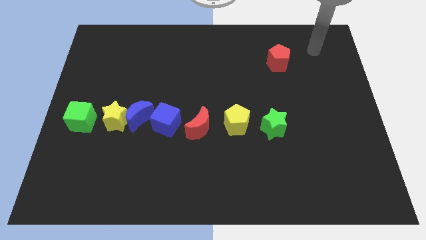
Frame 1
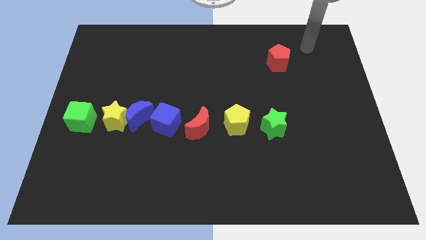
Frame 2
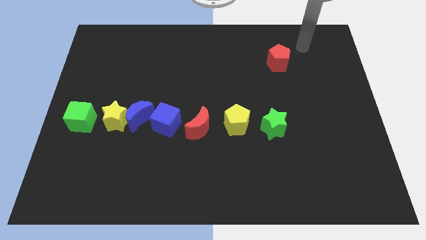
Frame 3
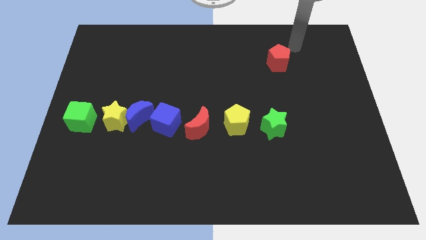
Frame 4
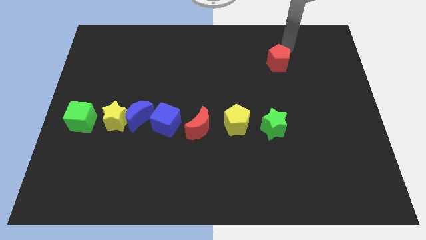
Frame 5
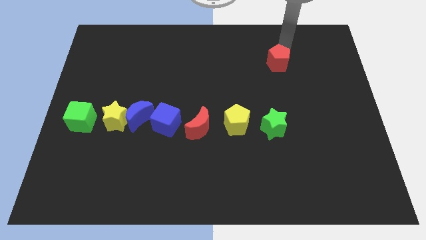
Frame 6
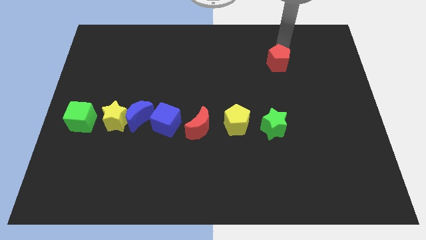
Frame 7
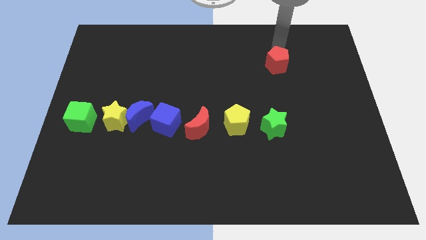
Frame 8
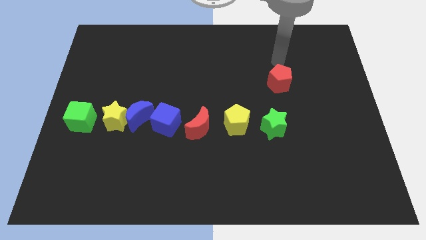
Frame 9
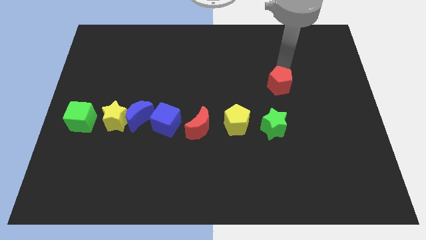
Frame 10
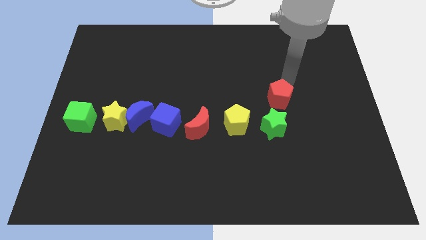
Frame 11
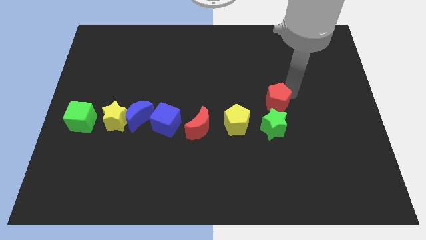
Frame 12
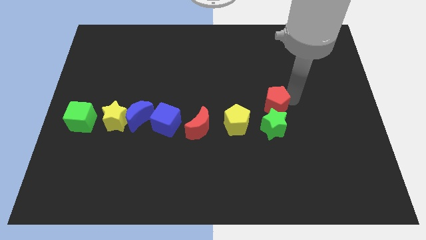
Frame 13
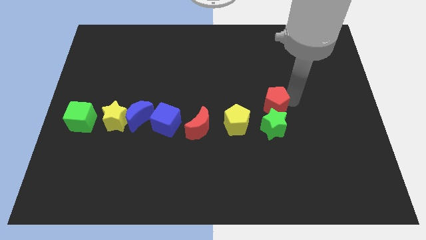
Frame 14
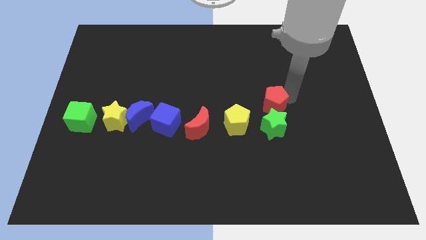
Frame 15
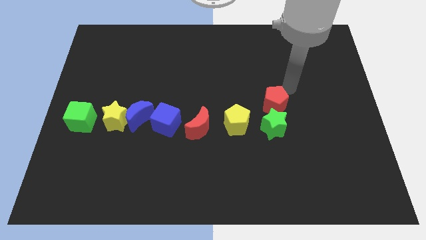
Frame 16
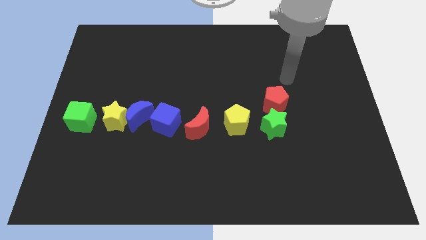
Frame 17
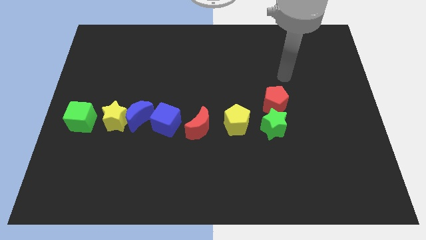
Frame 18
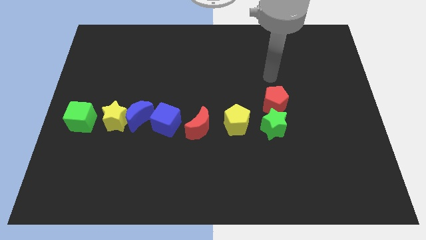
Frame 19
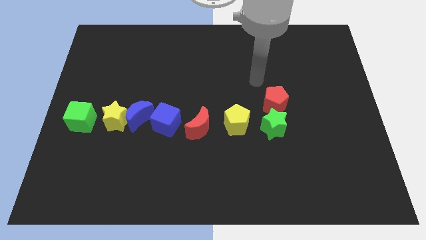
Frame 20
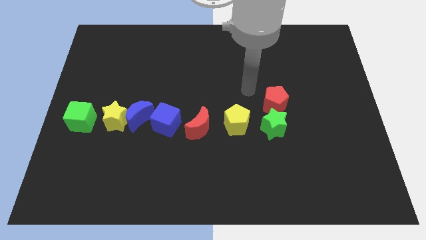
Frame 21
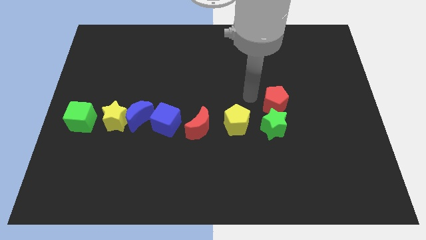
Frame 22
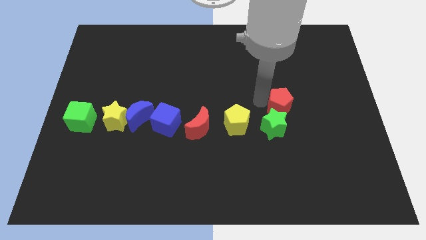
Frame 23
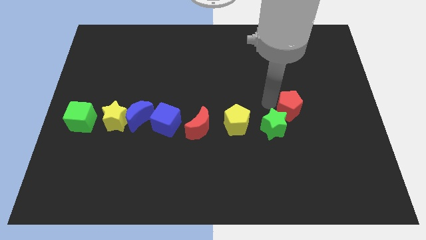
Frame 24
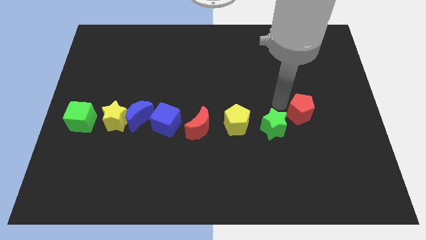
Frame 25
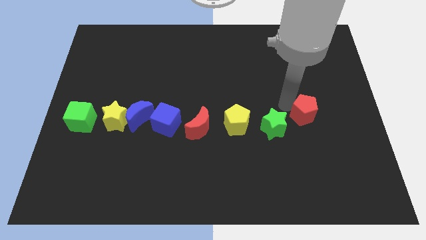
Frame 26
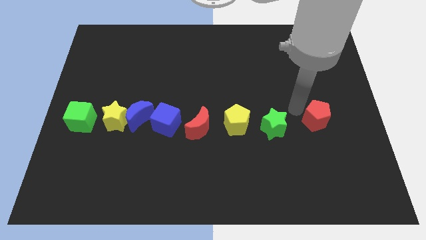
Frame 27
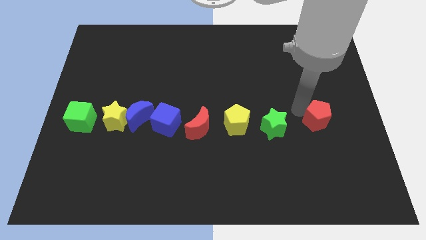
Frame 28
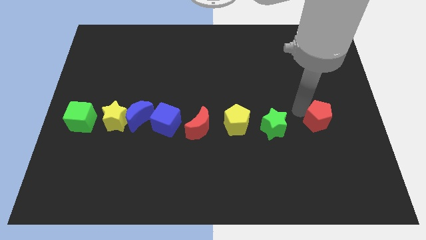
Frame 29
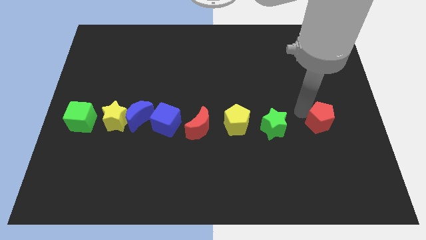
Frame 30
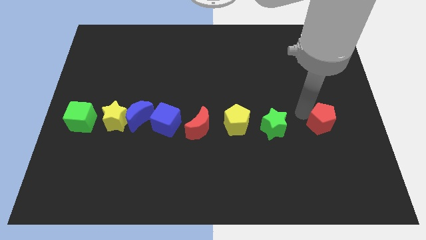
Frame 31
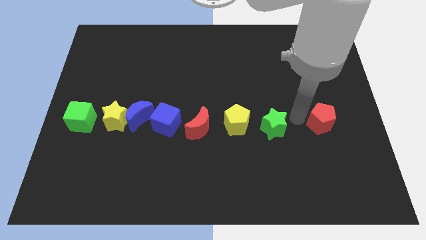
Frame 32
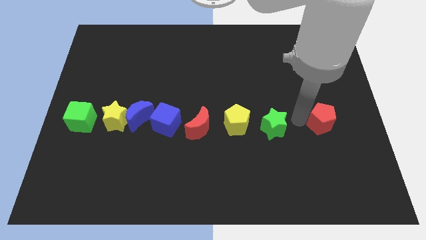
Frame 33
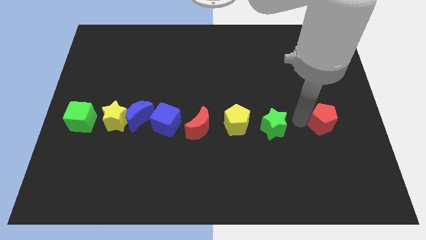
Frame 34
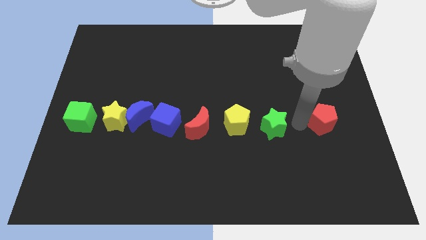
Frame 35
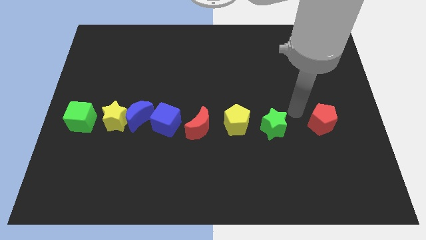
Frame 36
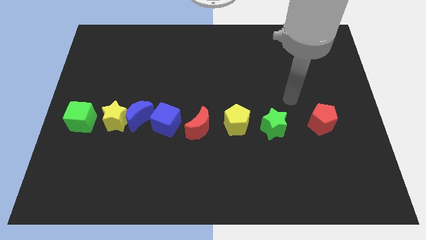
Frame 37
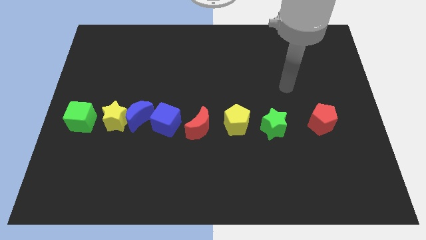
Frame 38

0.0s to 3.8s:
place the red pentagon right to the green star

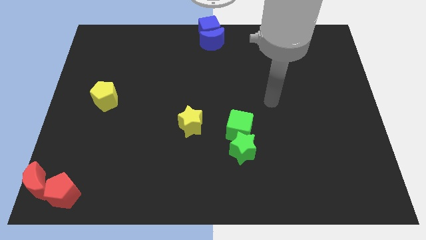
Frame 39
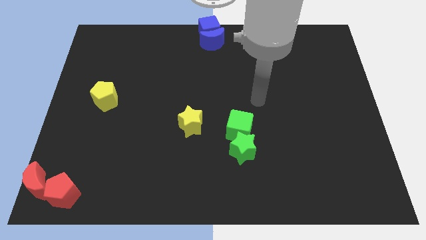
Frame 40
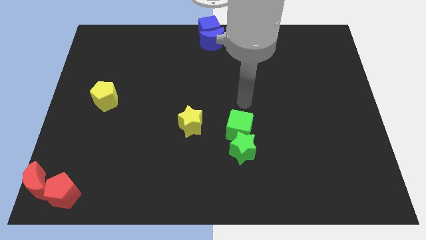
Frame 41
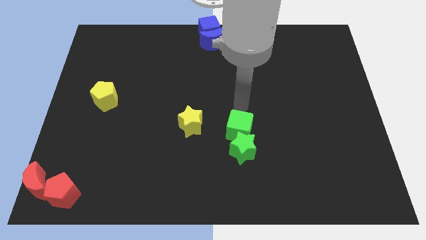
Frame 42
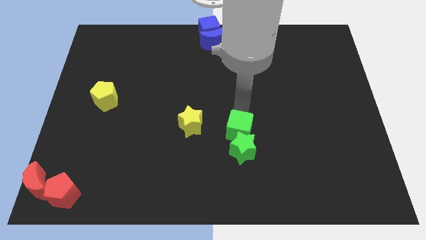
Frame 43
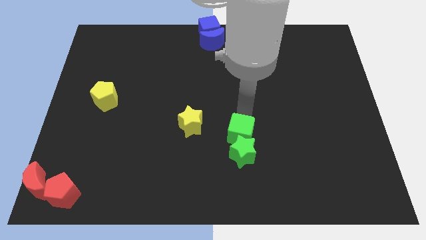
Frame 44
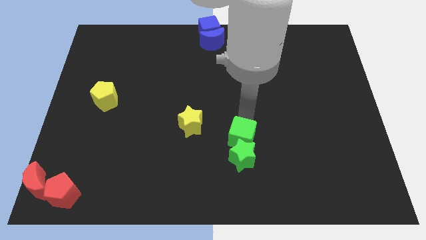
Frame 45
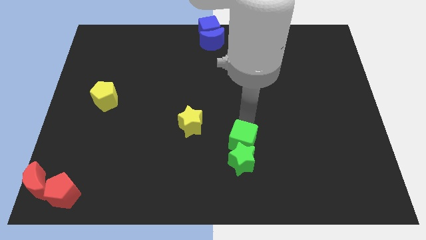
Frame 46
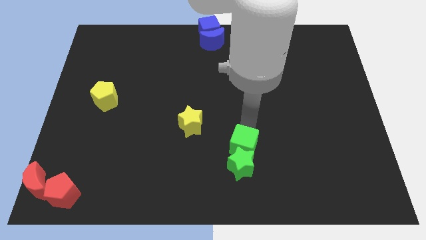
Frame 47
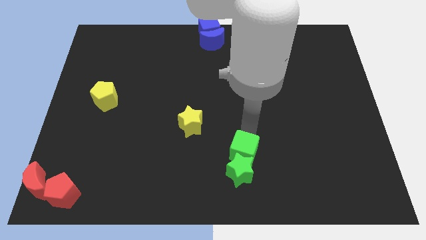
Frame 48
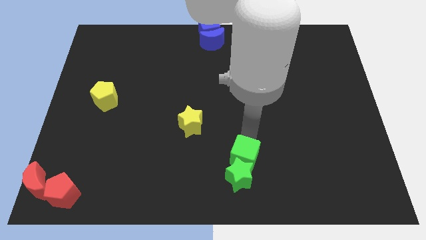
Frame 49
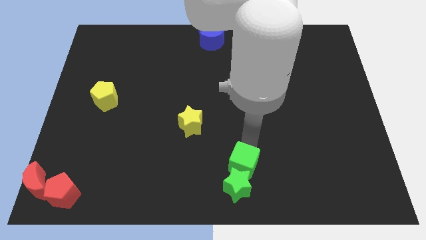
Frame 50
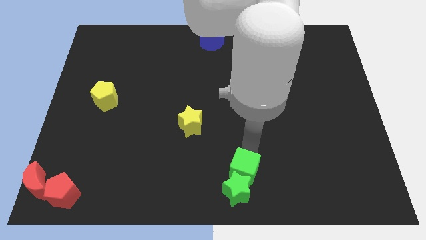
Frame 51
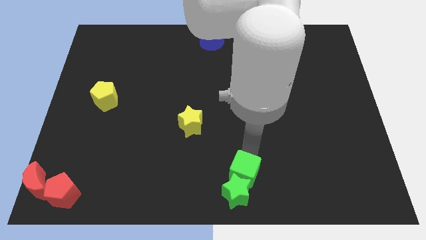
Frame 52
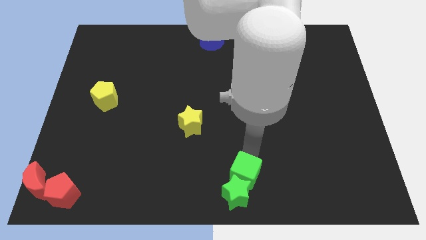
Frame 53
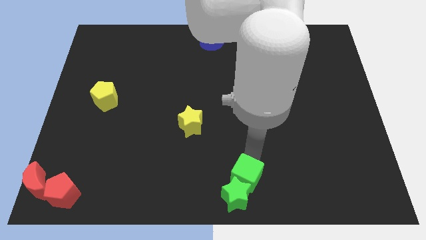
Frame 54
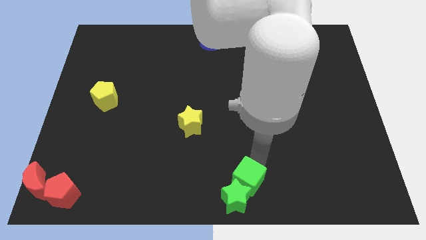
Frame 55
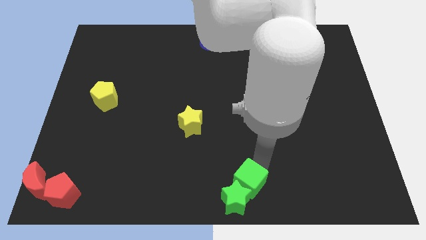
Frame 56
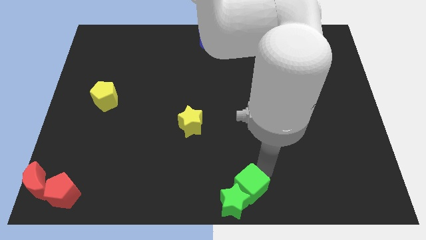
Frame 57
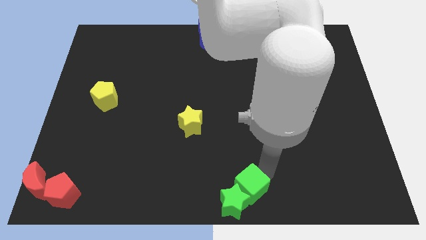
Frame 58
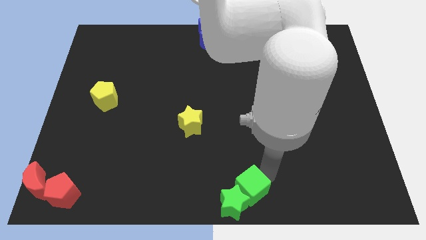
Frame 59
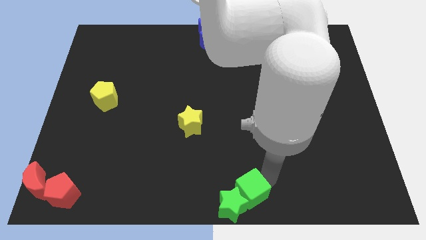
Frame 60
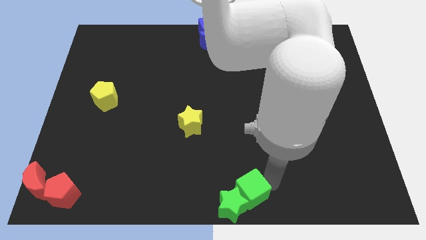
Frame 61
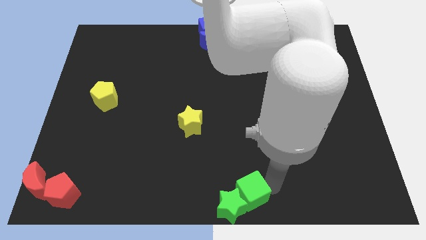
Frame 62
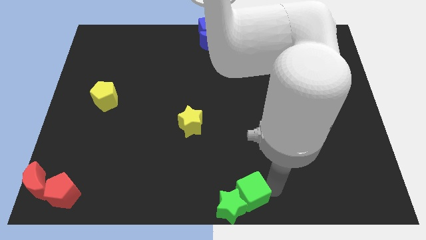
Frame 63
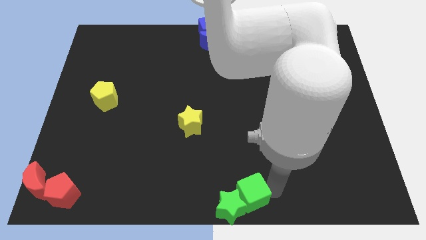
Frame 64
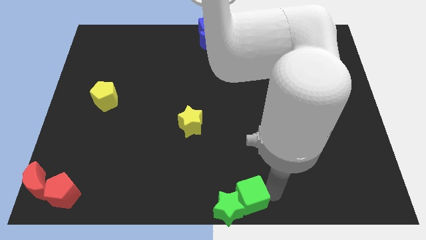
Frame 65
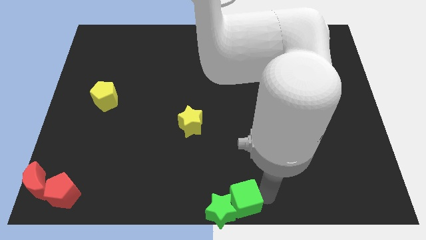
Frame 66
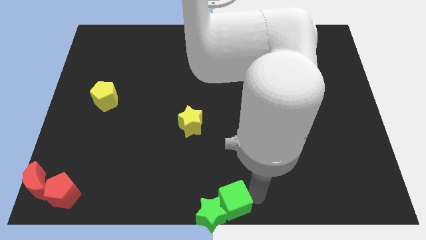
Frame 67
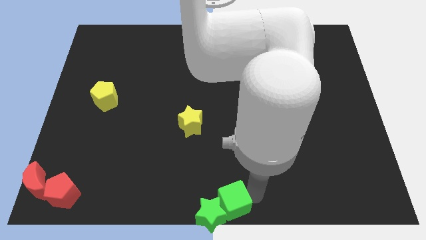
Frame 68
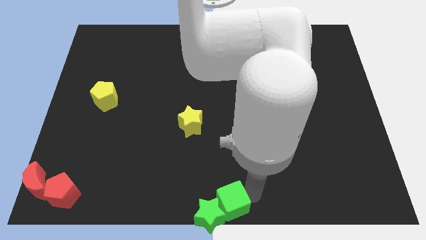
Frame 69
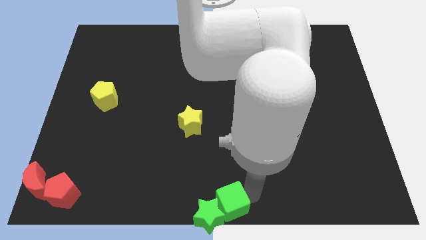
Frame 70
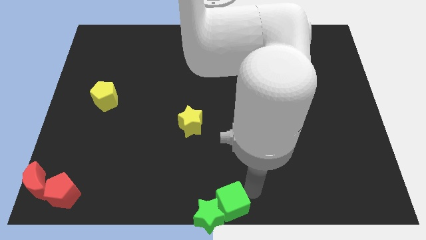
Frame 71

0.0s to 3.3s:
place the green blocks below the yellow star at the bottom

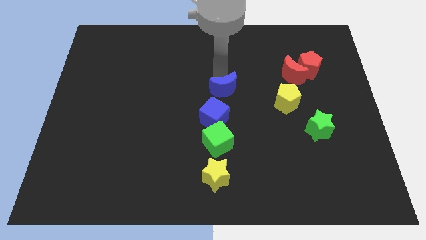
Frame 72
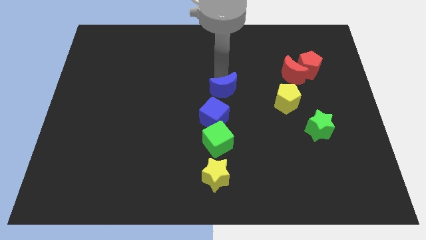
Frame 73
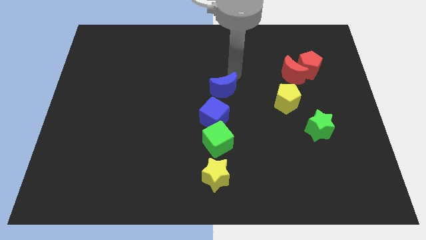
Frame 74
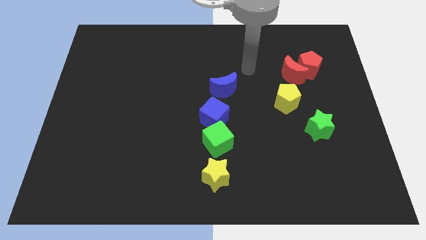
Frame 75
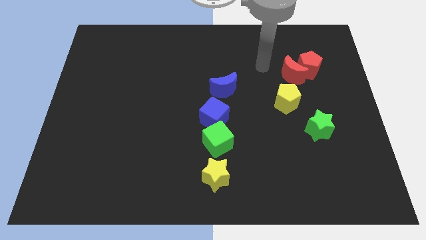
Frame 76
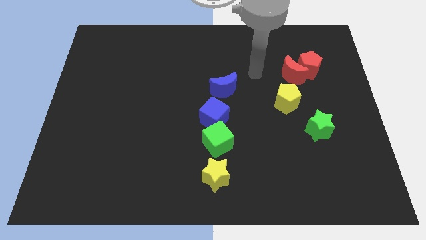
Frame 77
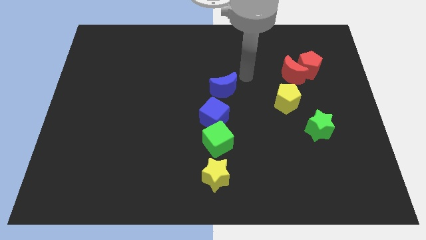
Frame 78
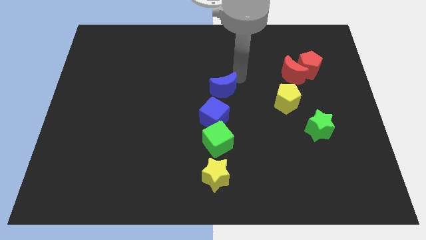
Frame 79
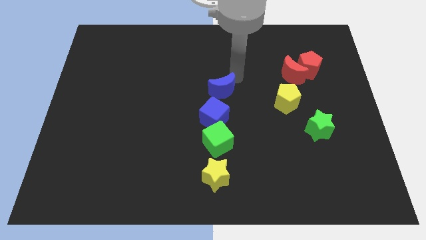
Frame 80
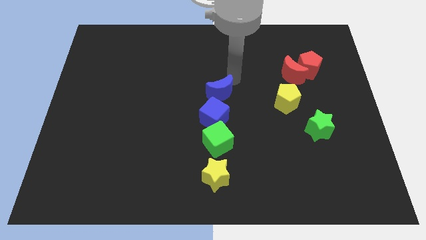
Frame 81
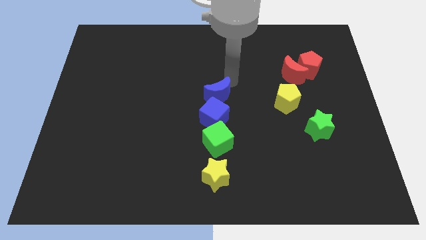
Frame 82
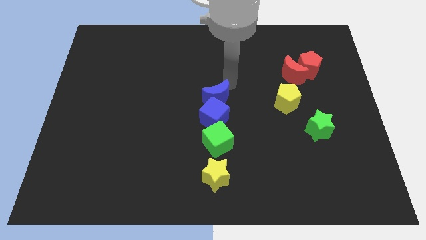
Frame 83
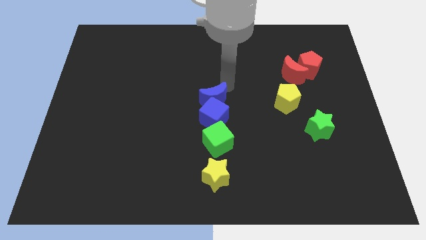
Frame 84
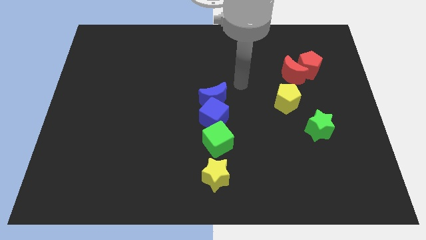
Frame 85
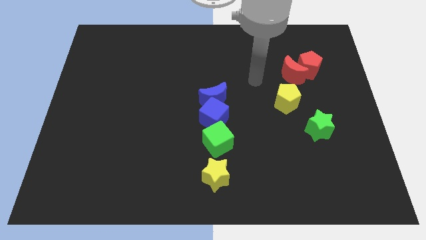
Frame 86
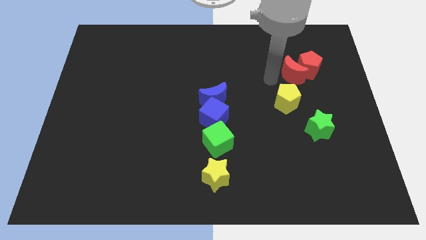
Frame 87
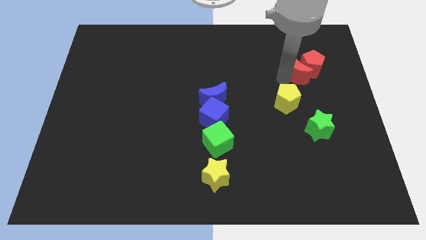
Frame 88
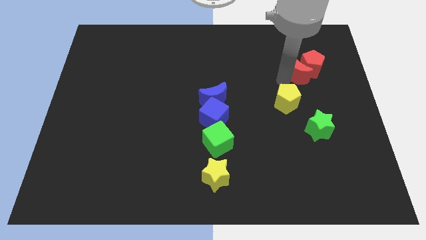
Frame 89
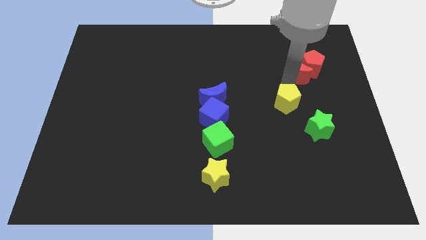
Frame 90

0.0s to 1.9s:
place the blue crescent on top of the blue cube
